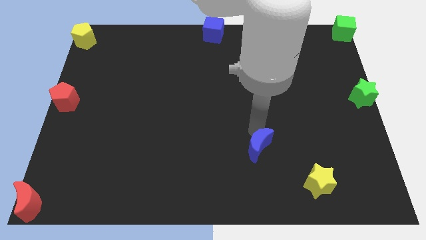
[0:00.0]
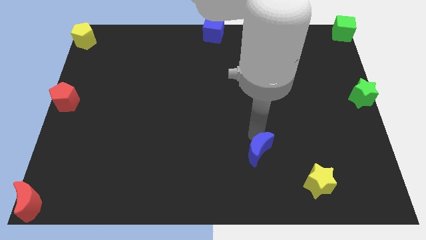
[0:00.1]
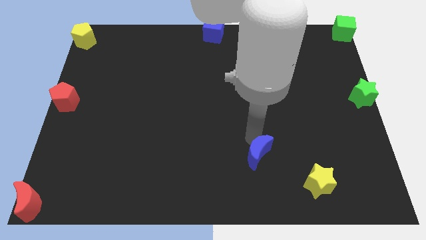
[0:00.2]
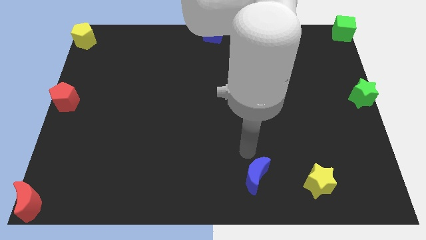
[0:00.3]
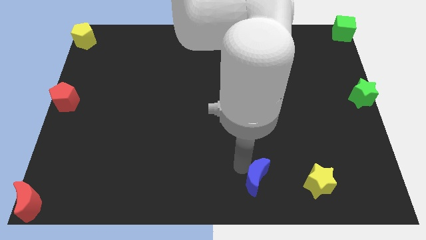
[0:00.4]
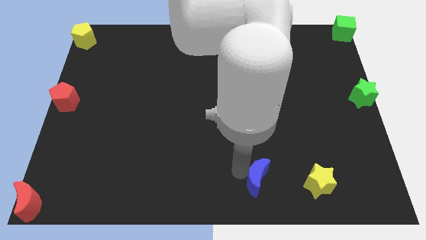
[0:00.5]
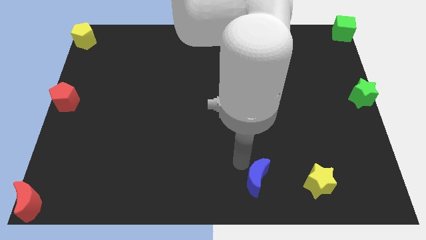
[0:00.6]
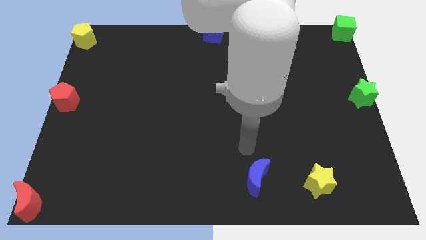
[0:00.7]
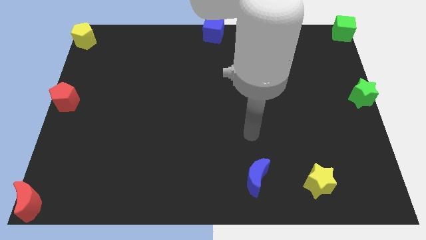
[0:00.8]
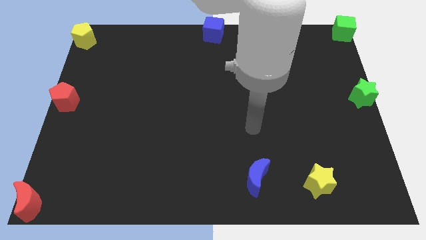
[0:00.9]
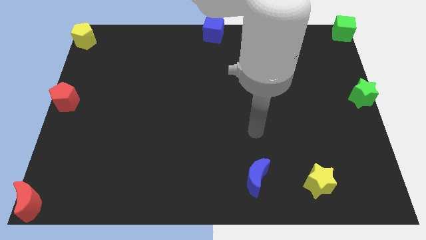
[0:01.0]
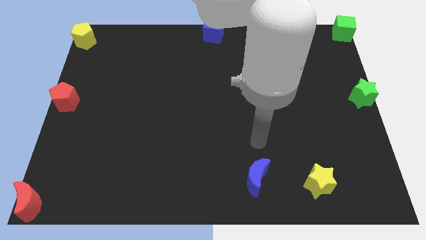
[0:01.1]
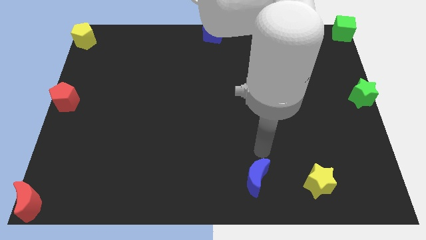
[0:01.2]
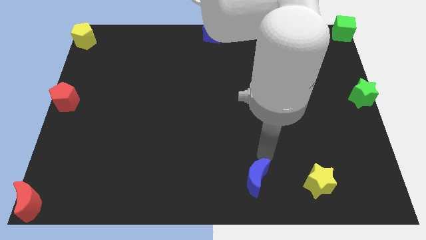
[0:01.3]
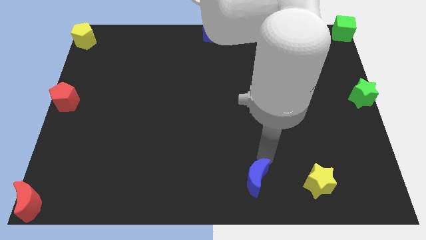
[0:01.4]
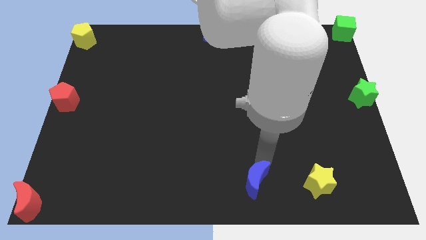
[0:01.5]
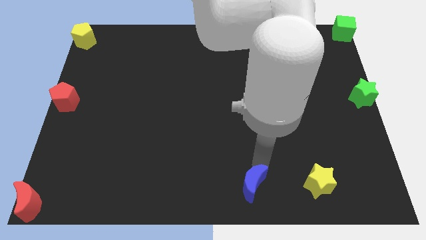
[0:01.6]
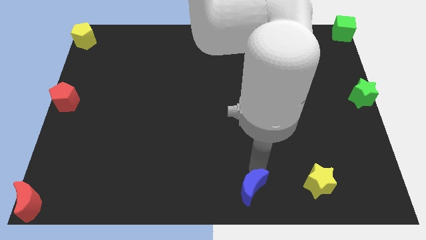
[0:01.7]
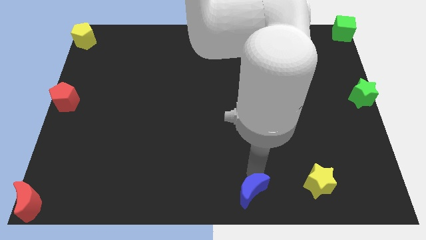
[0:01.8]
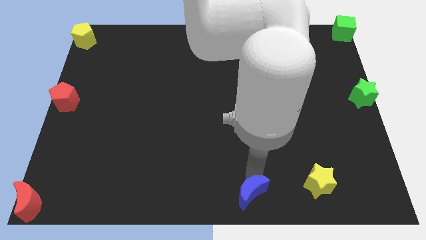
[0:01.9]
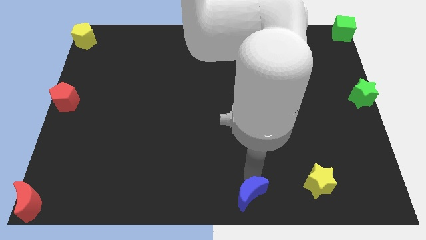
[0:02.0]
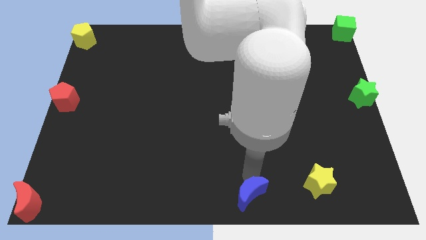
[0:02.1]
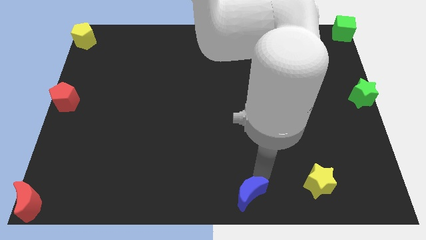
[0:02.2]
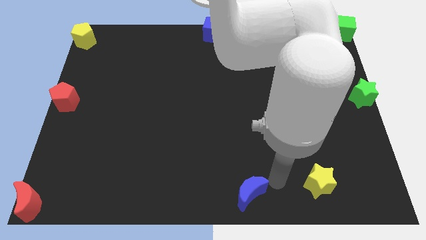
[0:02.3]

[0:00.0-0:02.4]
place blue crescent at bottom

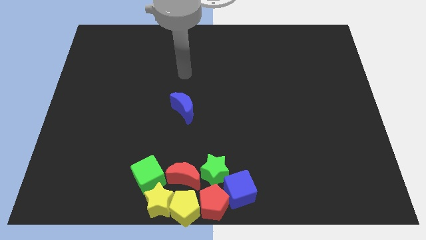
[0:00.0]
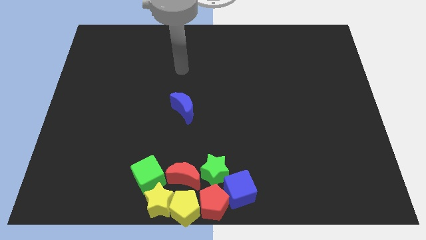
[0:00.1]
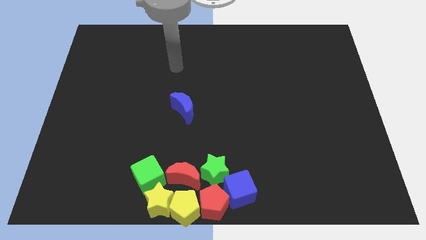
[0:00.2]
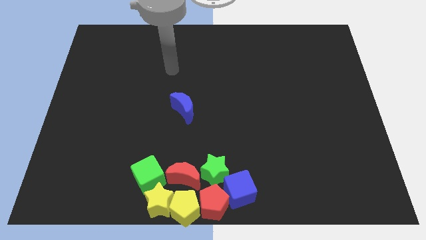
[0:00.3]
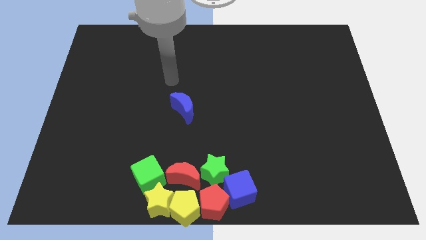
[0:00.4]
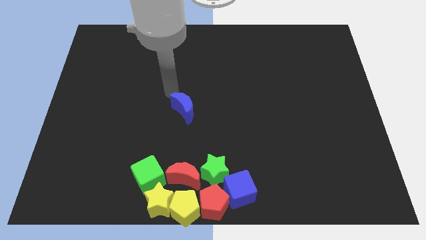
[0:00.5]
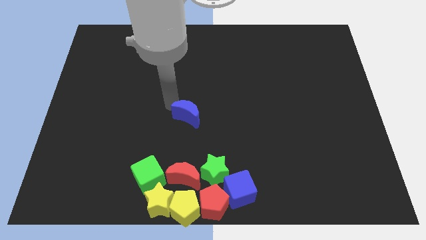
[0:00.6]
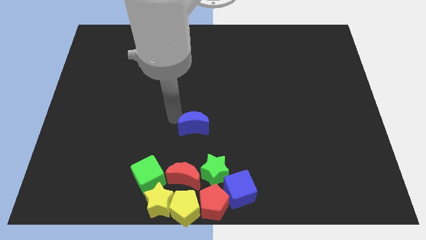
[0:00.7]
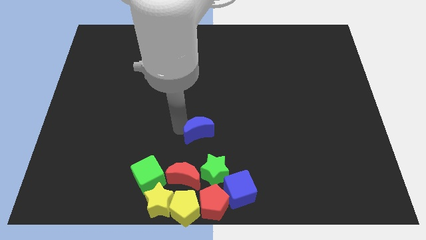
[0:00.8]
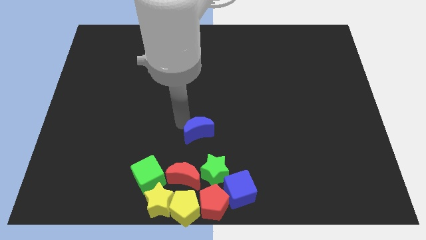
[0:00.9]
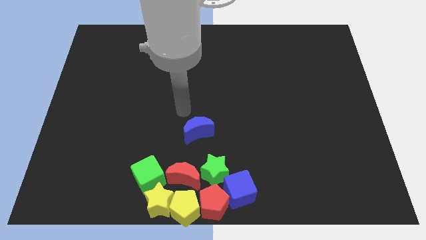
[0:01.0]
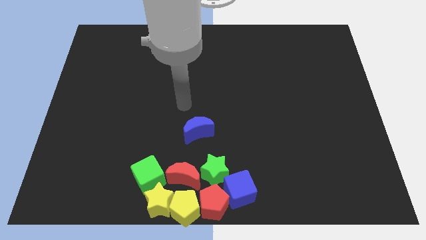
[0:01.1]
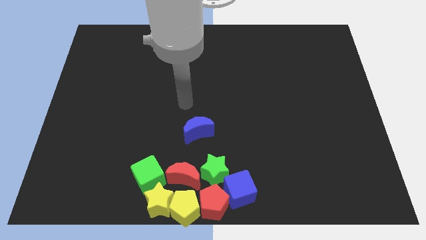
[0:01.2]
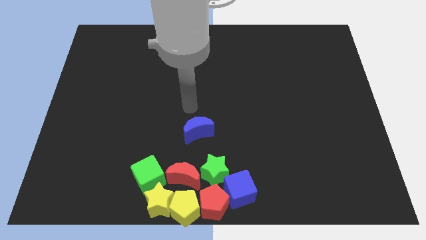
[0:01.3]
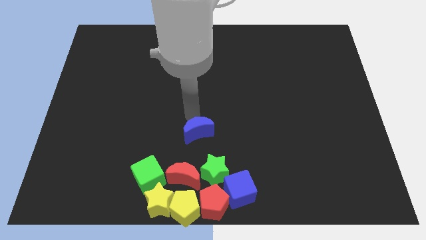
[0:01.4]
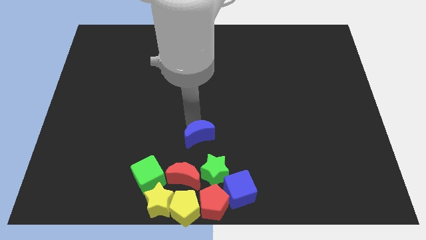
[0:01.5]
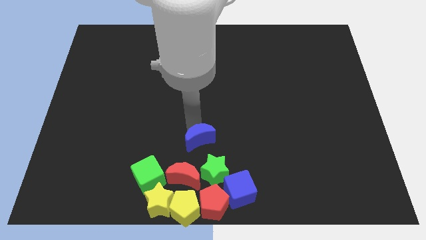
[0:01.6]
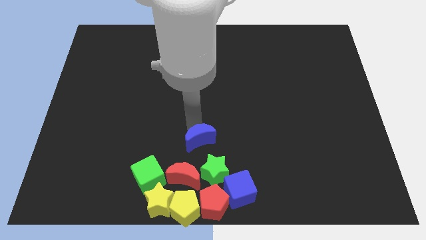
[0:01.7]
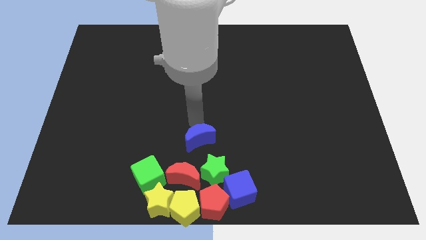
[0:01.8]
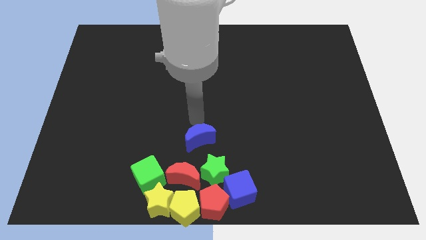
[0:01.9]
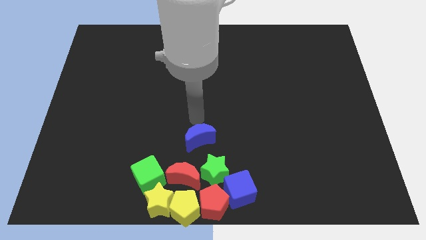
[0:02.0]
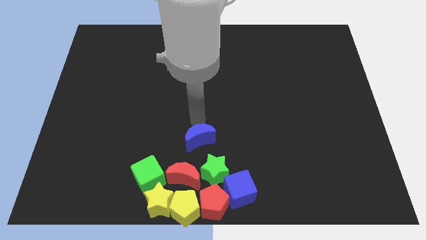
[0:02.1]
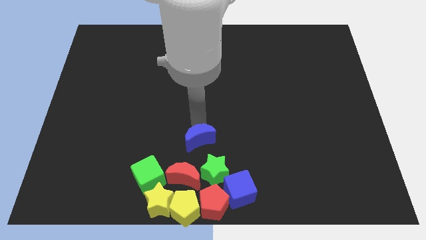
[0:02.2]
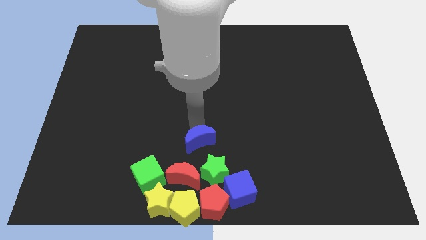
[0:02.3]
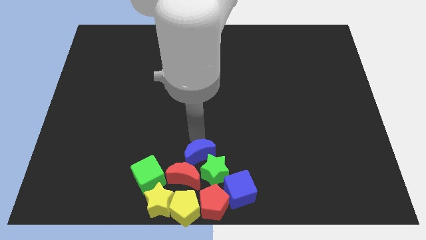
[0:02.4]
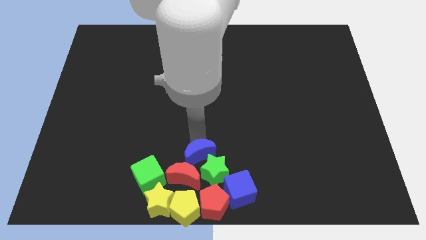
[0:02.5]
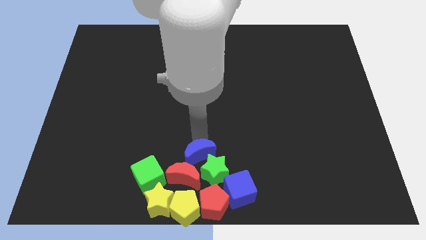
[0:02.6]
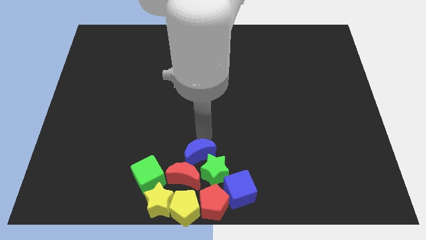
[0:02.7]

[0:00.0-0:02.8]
push the blue crescent top left to the green star

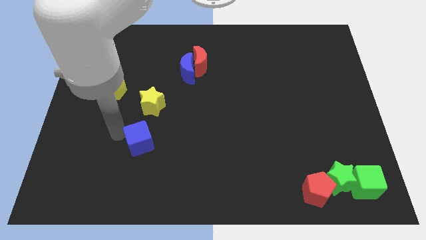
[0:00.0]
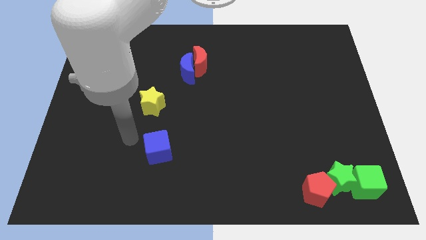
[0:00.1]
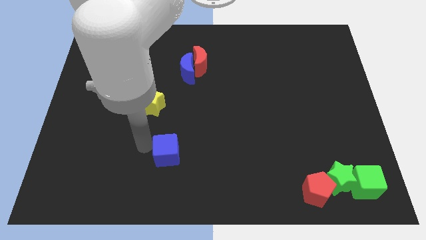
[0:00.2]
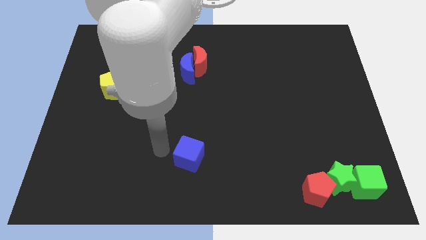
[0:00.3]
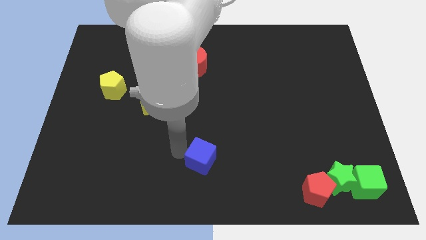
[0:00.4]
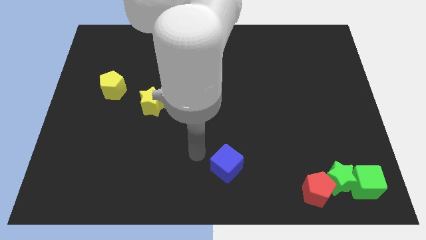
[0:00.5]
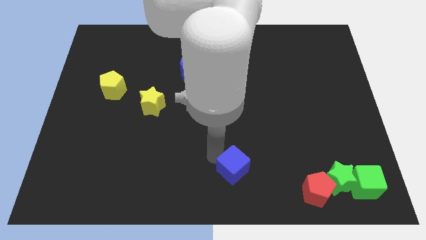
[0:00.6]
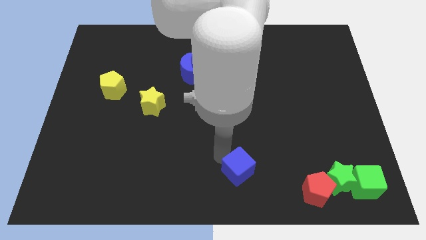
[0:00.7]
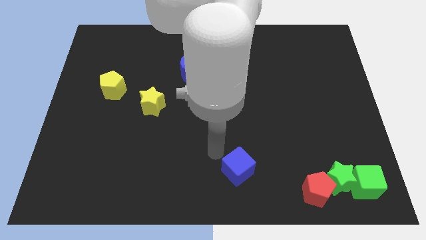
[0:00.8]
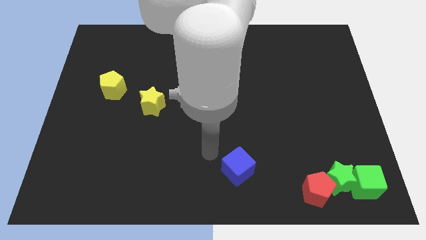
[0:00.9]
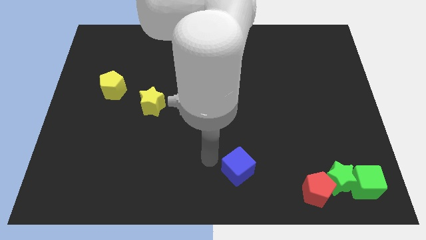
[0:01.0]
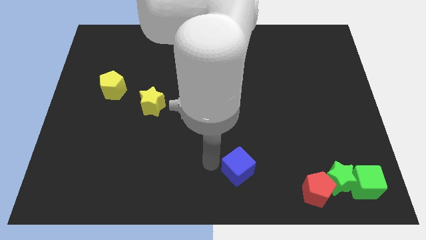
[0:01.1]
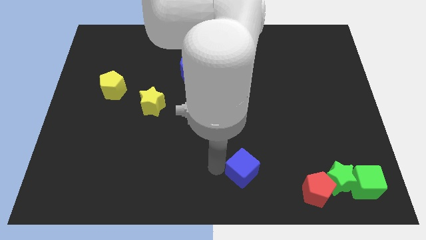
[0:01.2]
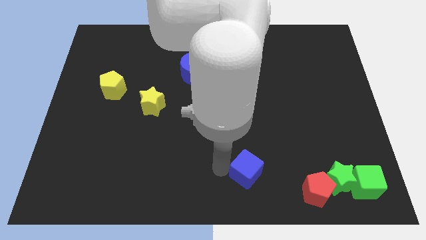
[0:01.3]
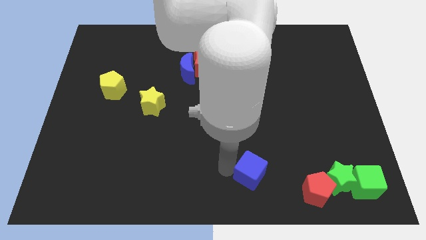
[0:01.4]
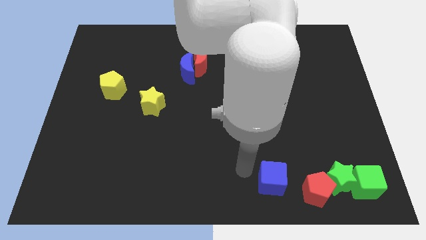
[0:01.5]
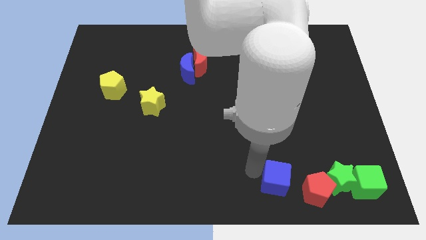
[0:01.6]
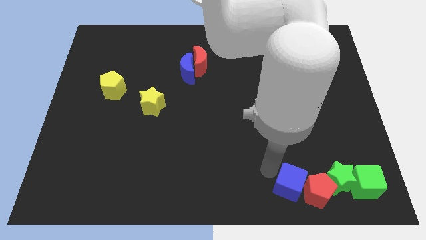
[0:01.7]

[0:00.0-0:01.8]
place the blue cube to the left of the red pentagon

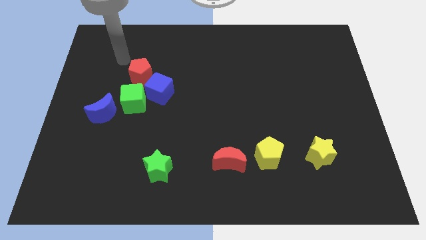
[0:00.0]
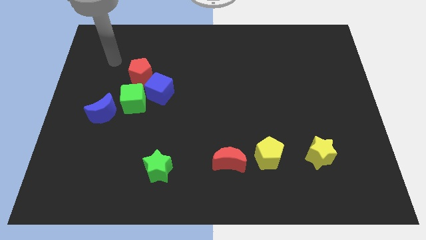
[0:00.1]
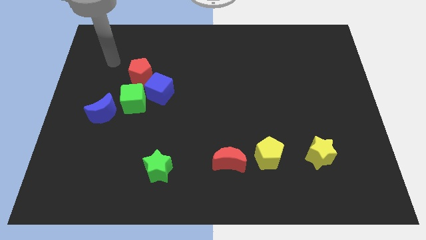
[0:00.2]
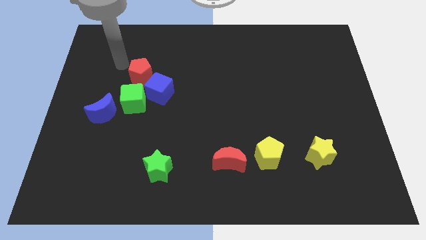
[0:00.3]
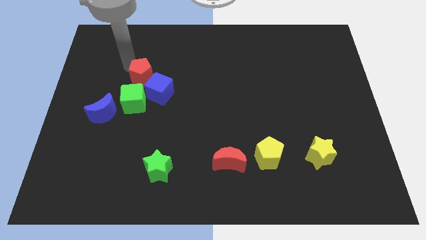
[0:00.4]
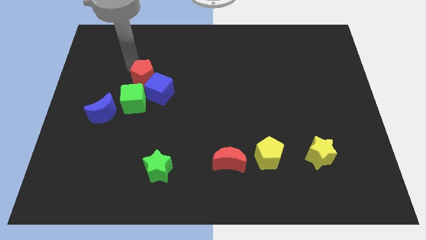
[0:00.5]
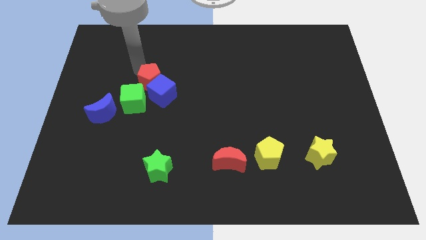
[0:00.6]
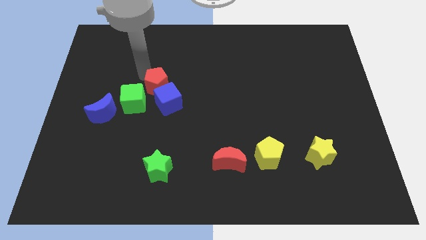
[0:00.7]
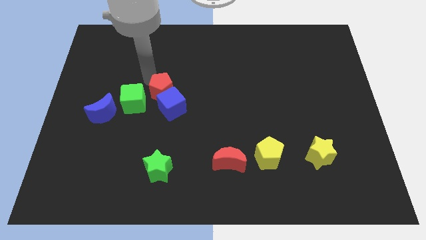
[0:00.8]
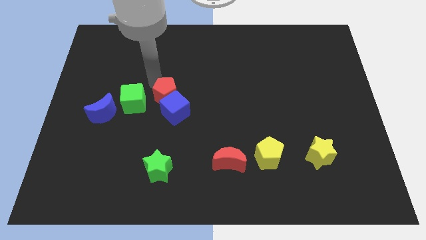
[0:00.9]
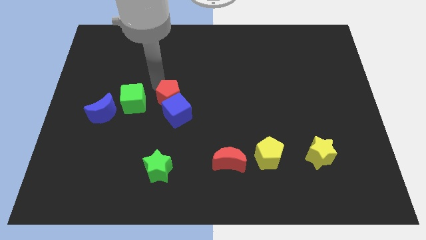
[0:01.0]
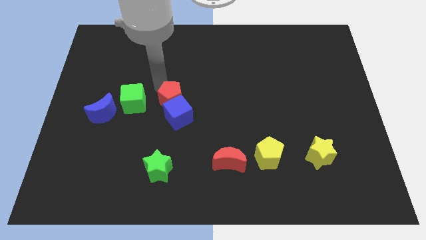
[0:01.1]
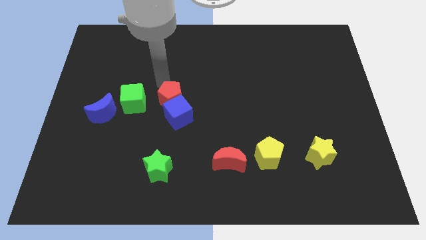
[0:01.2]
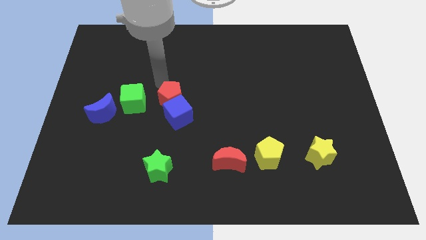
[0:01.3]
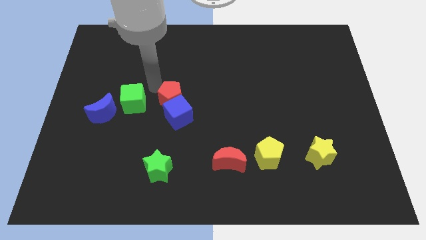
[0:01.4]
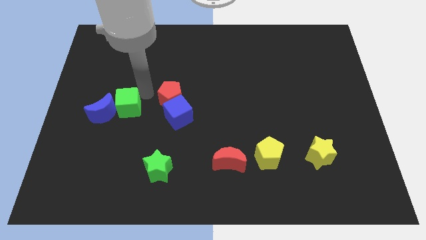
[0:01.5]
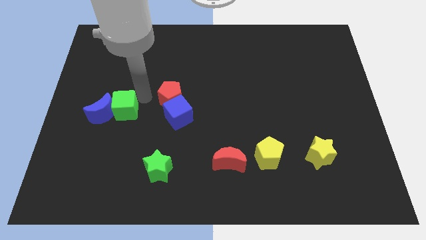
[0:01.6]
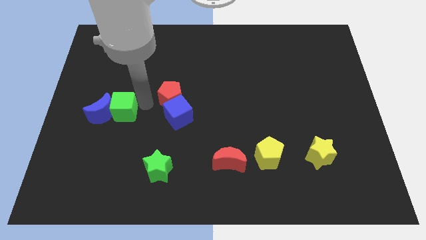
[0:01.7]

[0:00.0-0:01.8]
move the red pentagon into the blue cube
